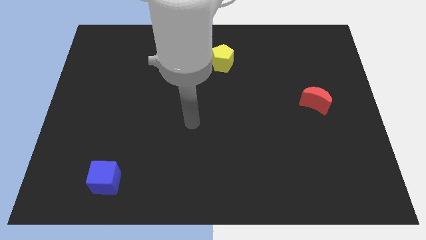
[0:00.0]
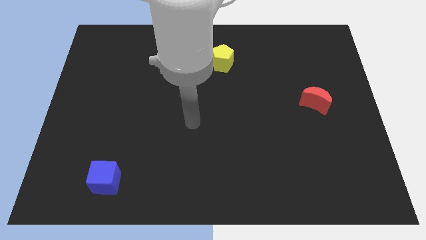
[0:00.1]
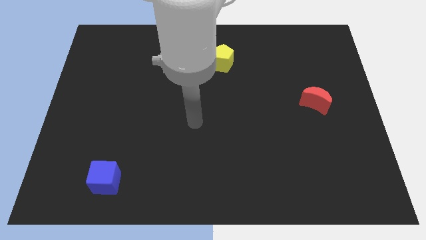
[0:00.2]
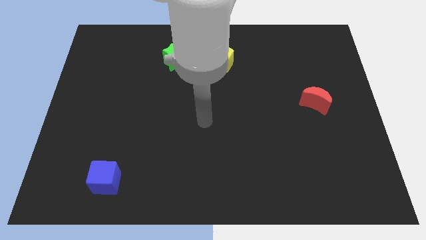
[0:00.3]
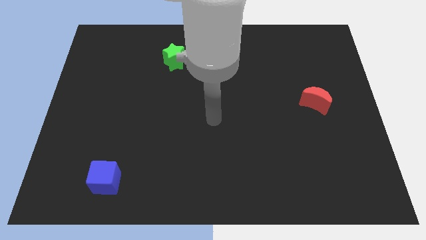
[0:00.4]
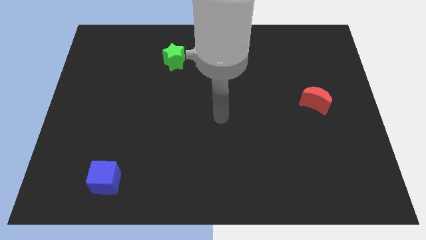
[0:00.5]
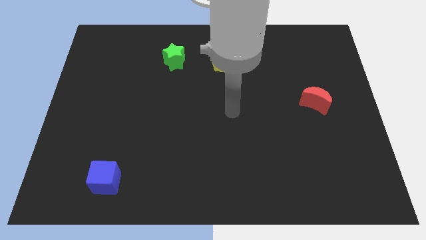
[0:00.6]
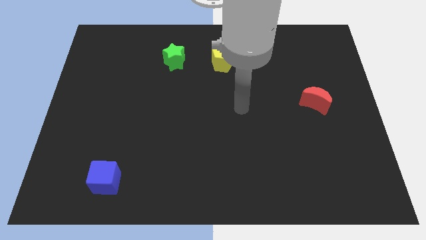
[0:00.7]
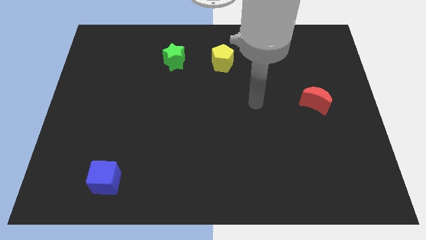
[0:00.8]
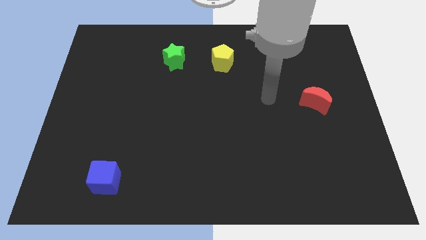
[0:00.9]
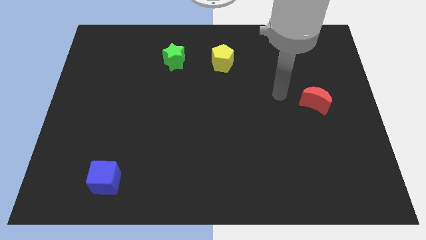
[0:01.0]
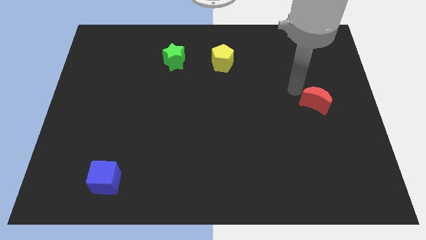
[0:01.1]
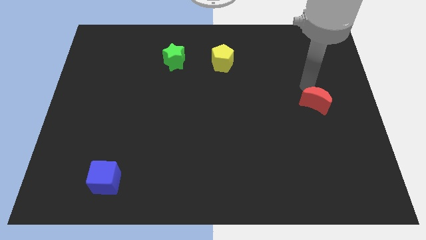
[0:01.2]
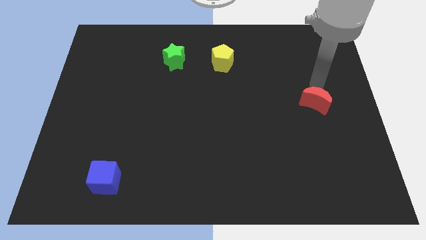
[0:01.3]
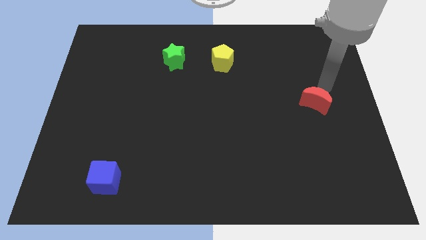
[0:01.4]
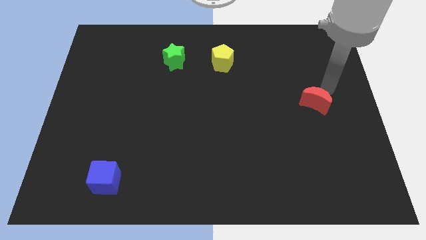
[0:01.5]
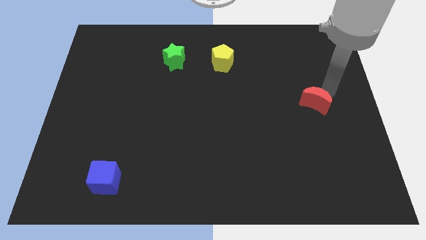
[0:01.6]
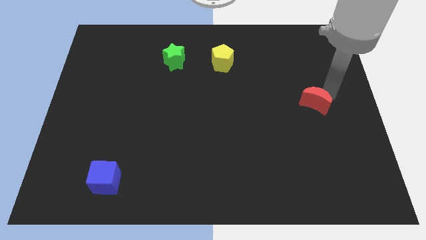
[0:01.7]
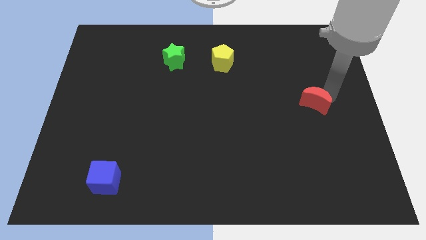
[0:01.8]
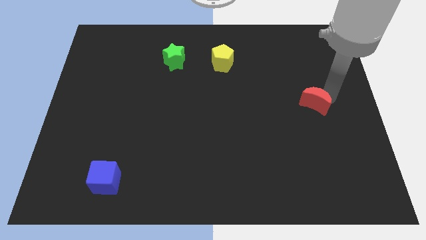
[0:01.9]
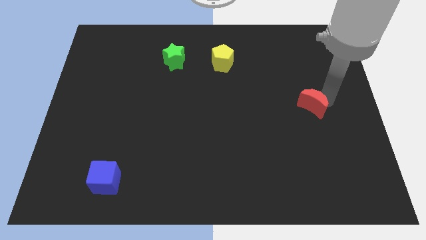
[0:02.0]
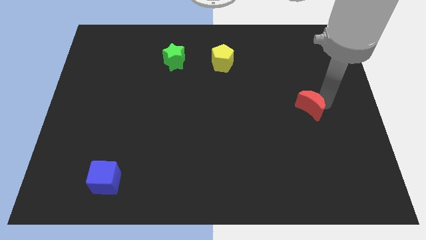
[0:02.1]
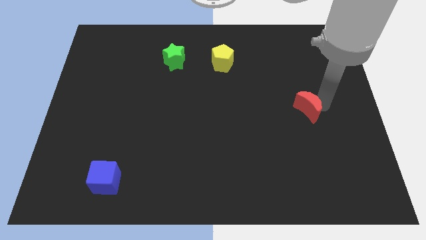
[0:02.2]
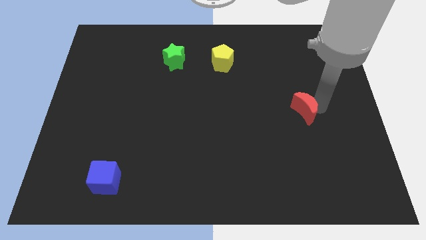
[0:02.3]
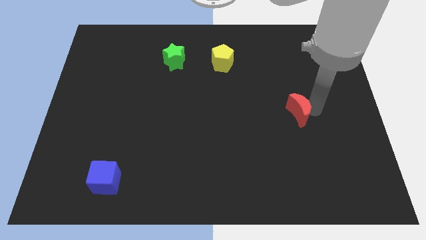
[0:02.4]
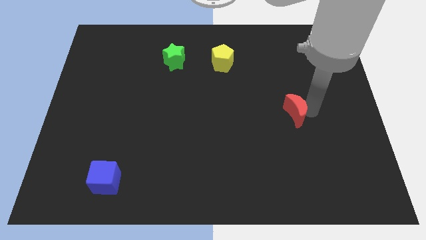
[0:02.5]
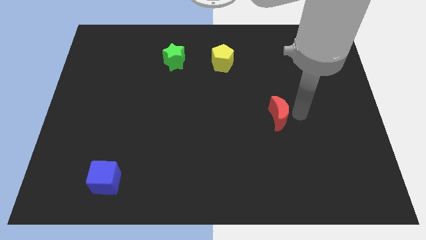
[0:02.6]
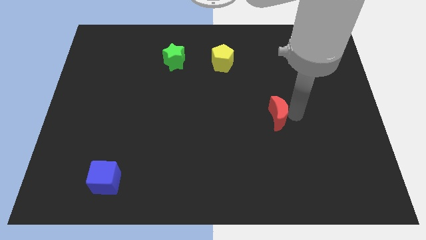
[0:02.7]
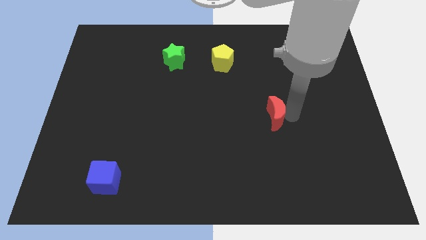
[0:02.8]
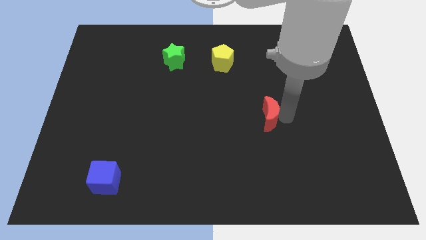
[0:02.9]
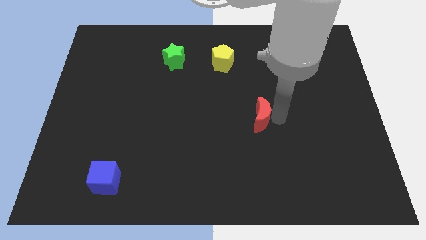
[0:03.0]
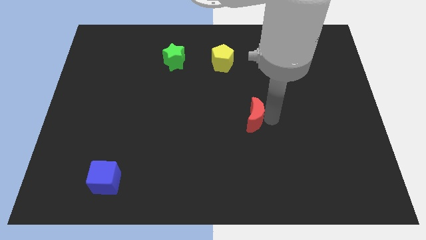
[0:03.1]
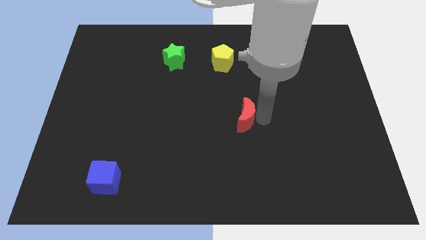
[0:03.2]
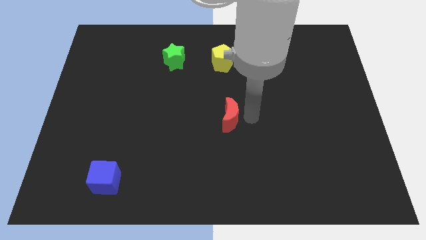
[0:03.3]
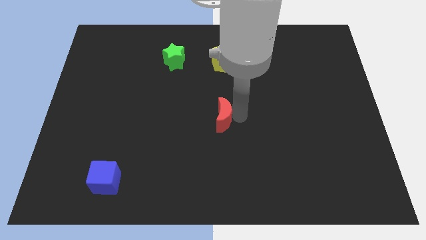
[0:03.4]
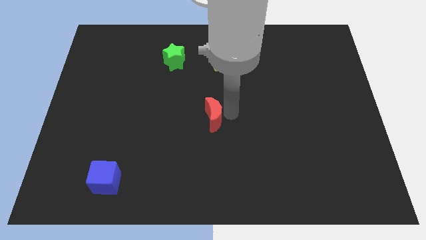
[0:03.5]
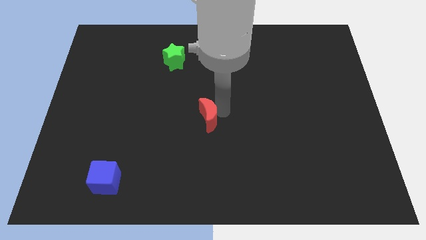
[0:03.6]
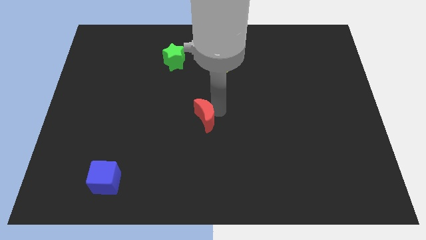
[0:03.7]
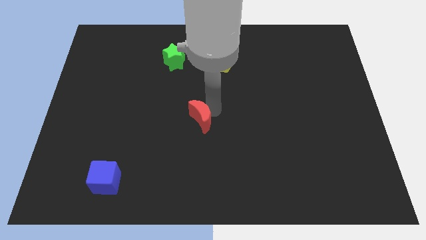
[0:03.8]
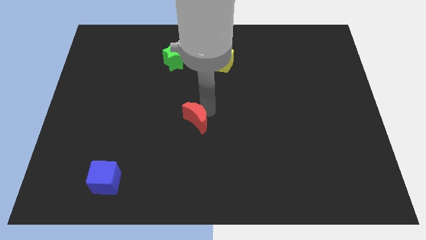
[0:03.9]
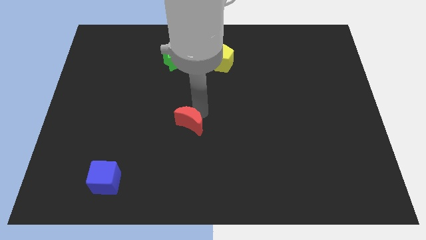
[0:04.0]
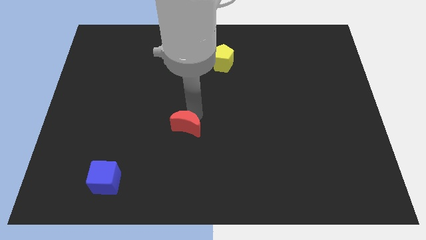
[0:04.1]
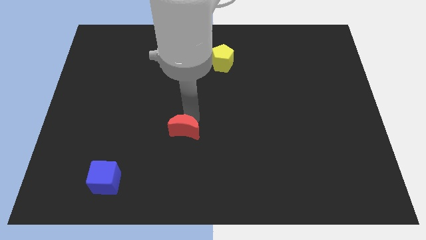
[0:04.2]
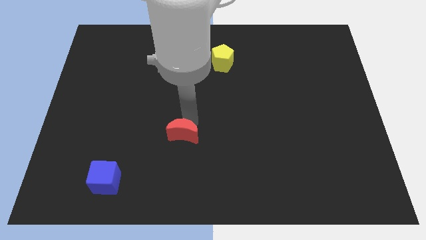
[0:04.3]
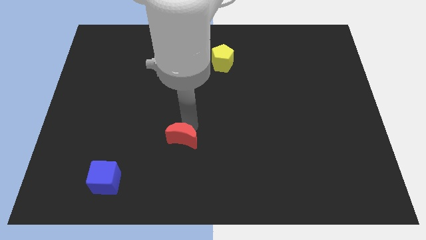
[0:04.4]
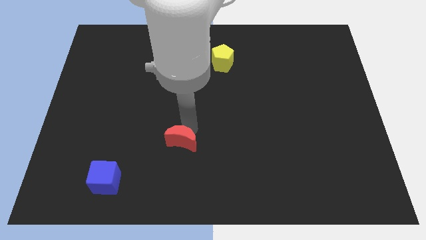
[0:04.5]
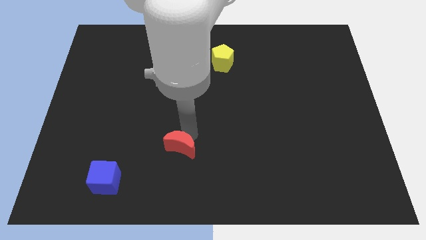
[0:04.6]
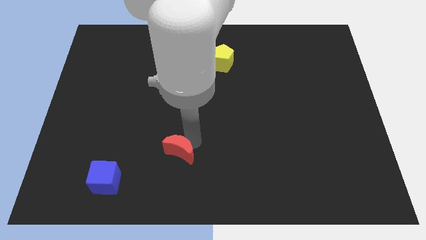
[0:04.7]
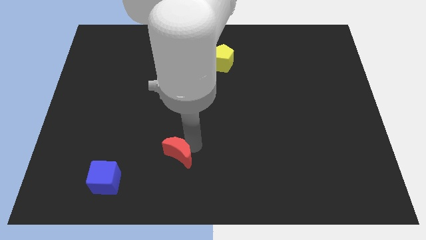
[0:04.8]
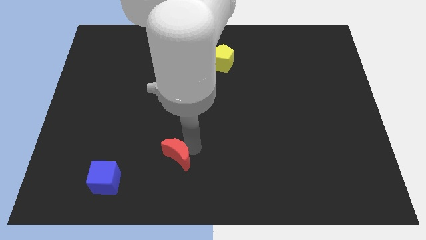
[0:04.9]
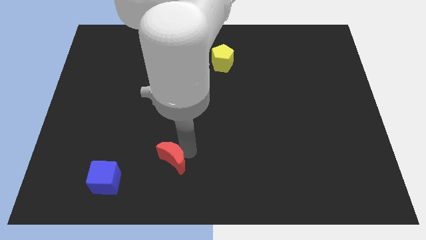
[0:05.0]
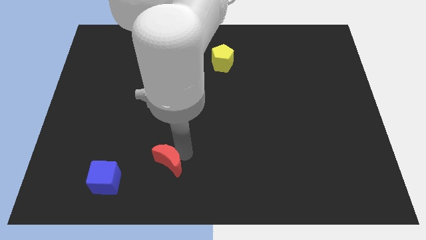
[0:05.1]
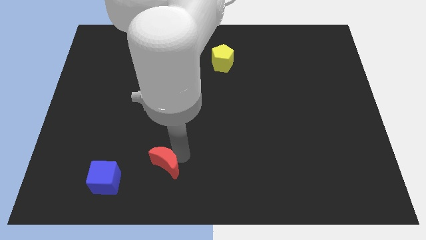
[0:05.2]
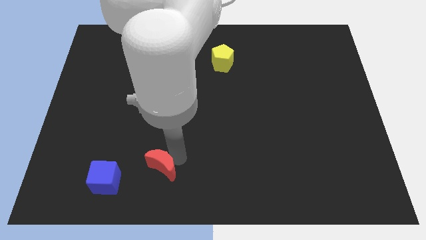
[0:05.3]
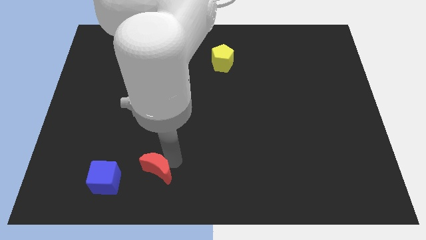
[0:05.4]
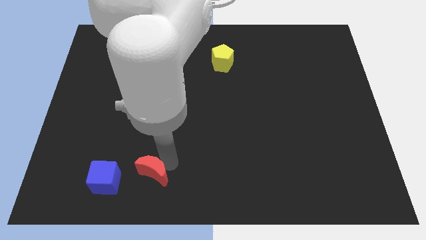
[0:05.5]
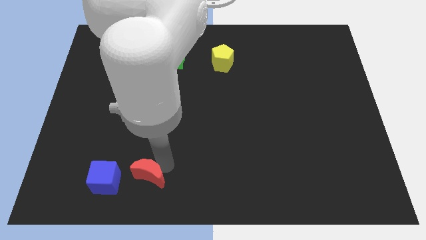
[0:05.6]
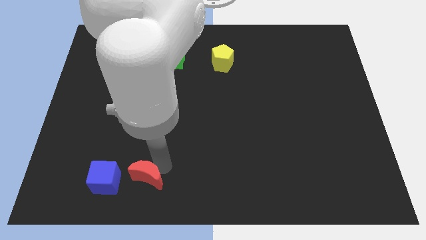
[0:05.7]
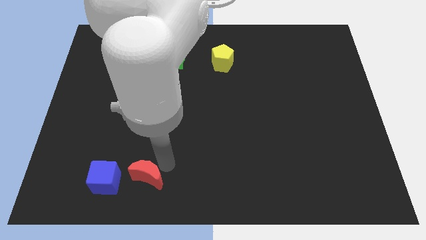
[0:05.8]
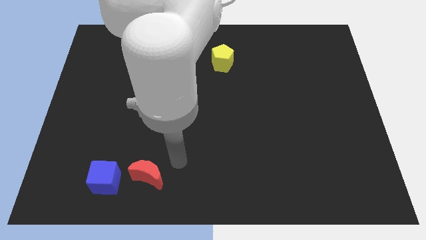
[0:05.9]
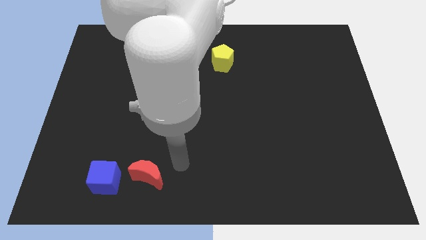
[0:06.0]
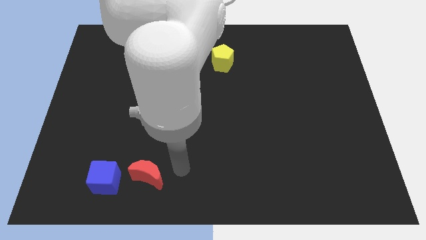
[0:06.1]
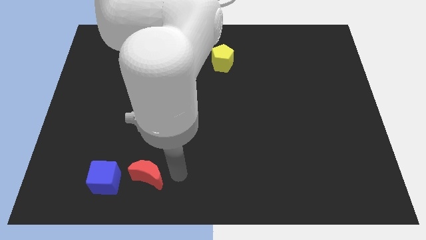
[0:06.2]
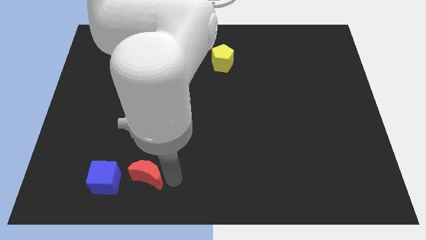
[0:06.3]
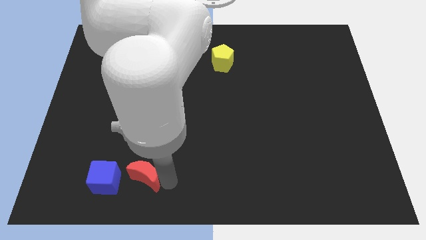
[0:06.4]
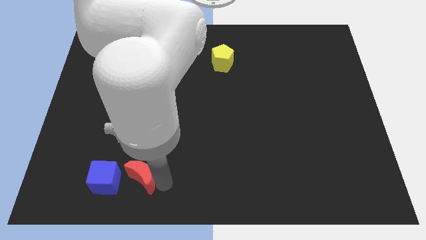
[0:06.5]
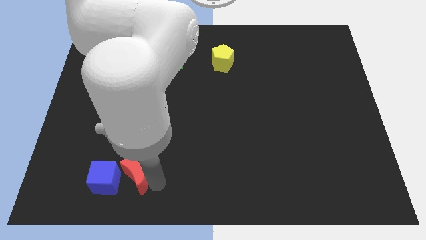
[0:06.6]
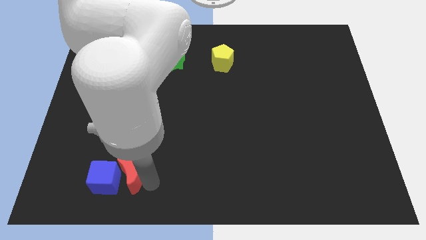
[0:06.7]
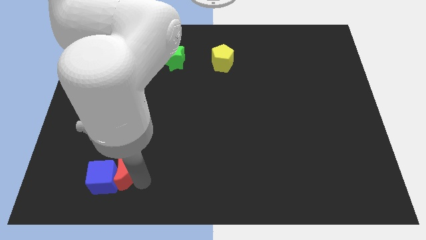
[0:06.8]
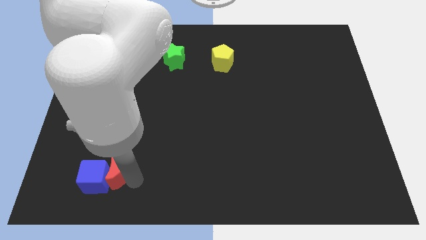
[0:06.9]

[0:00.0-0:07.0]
push the red moon next to the blue cube

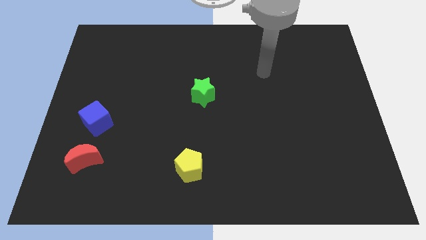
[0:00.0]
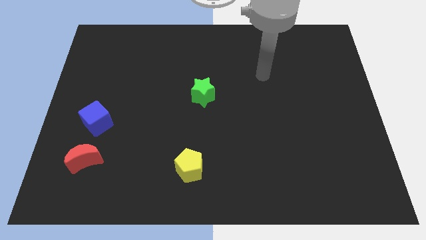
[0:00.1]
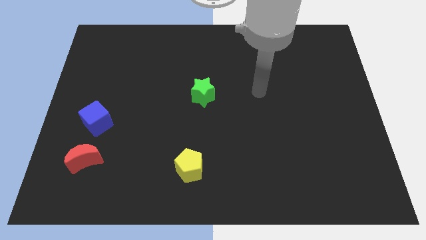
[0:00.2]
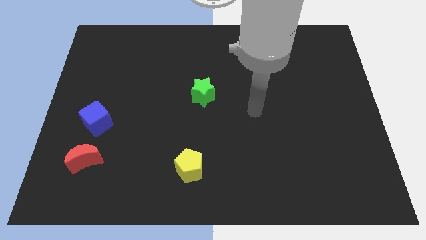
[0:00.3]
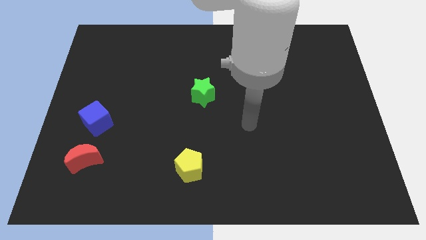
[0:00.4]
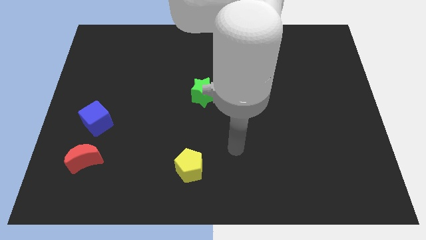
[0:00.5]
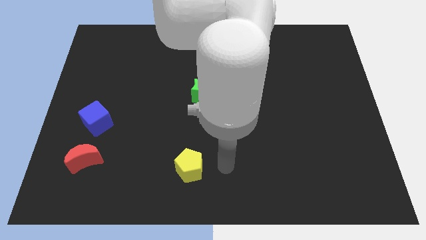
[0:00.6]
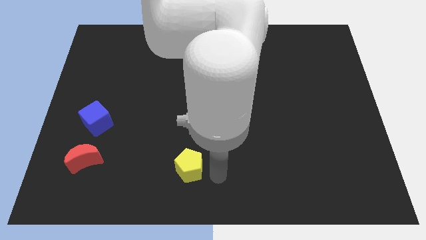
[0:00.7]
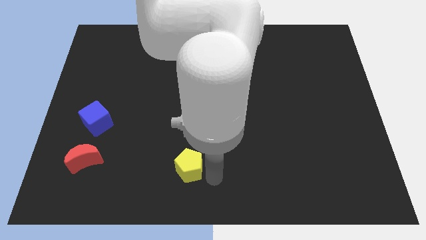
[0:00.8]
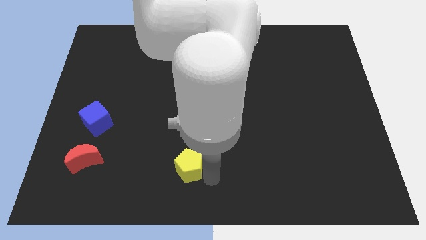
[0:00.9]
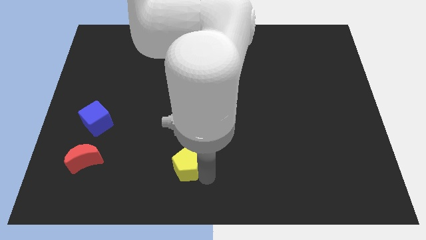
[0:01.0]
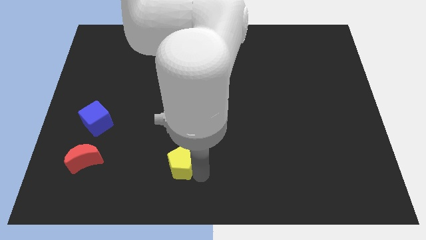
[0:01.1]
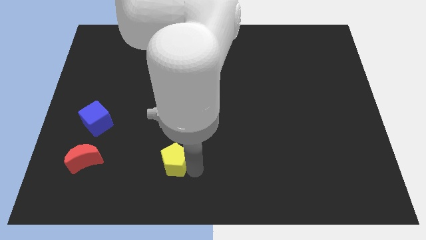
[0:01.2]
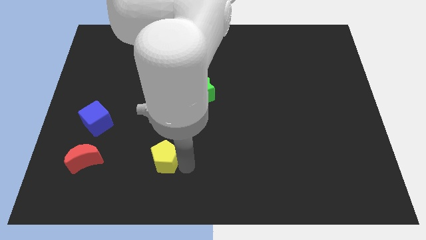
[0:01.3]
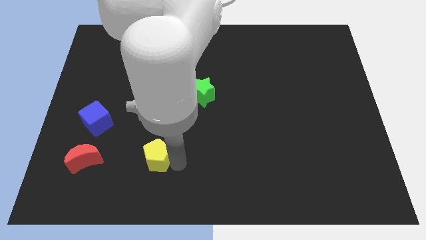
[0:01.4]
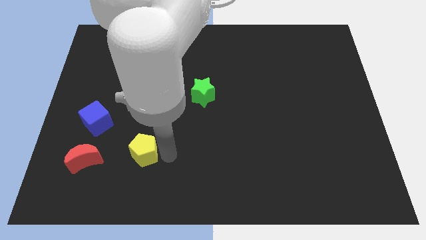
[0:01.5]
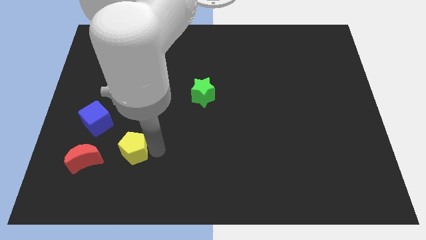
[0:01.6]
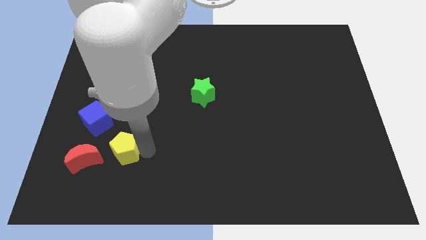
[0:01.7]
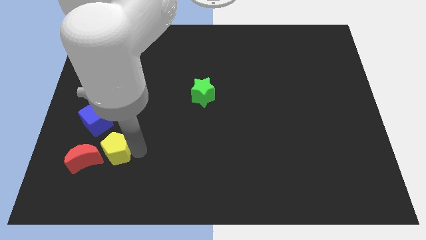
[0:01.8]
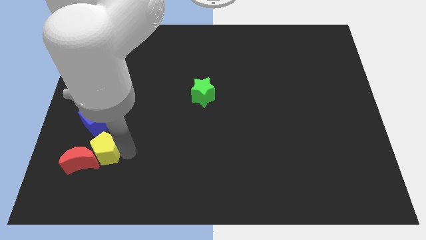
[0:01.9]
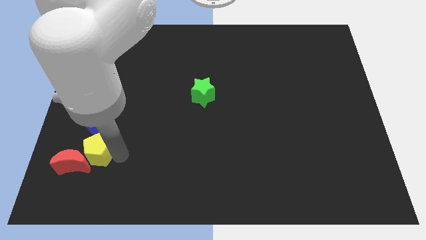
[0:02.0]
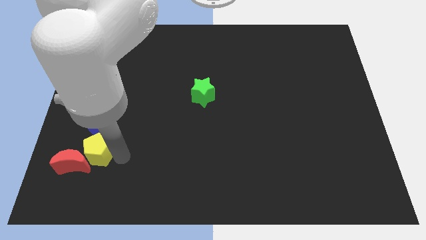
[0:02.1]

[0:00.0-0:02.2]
slide the yellow pentagon close to the red block
